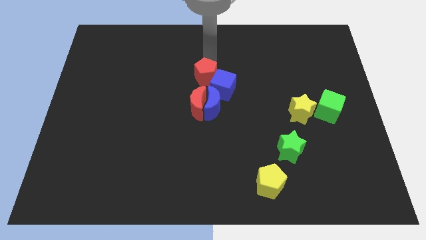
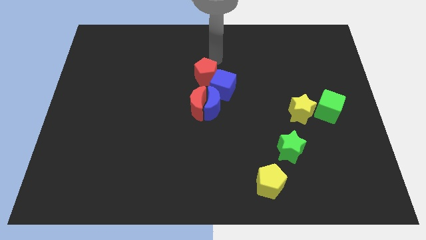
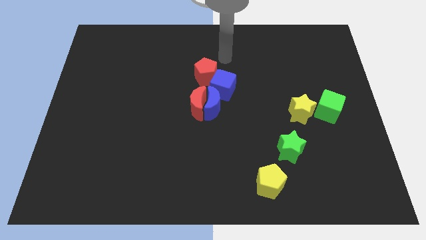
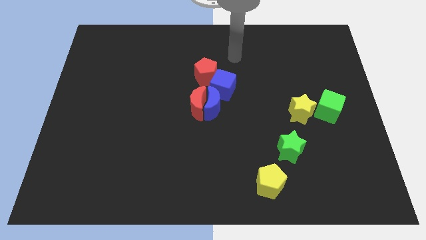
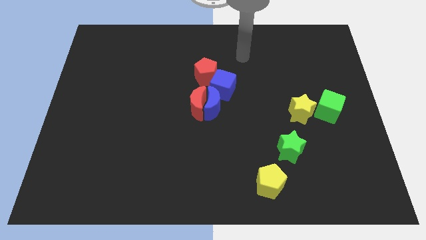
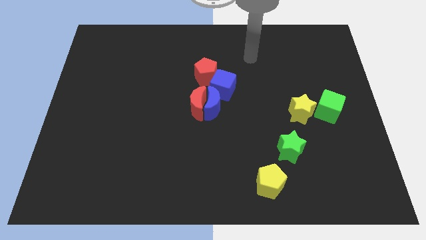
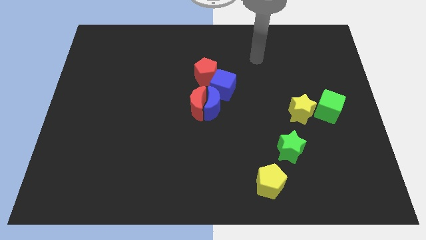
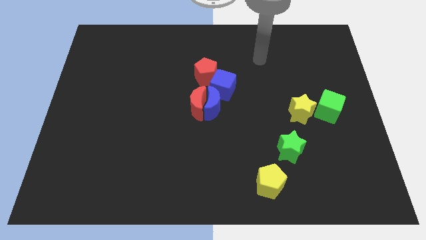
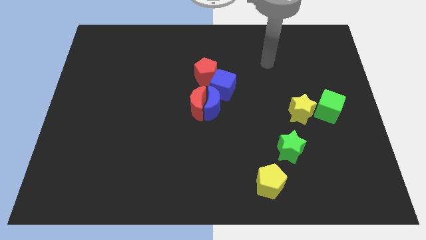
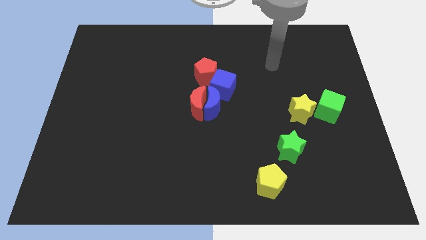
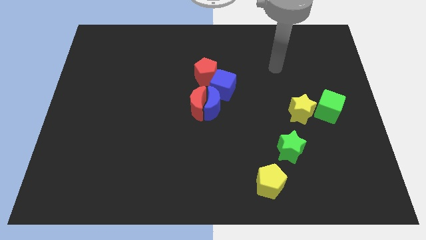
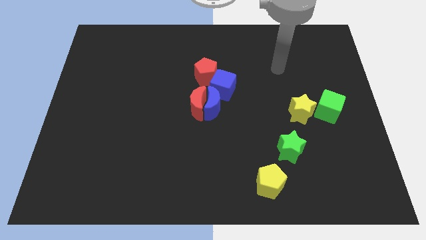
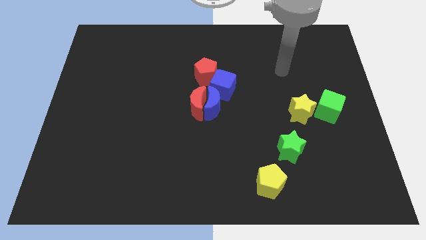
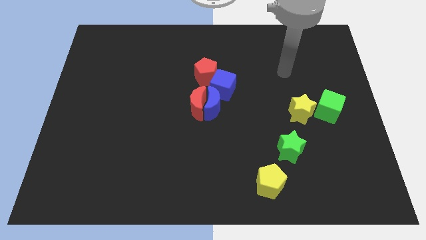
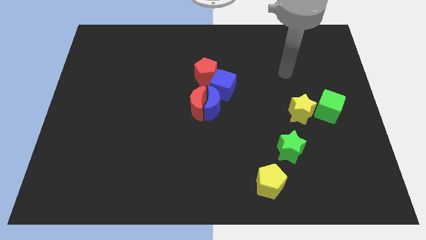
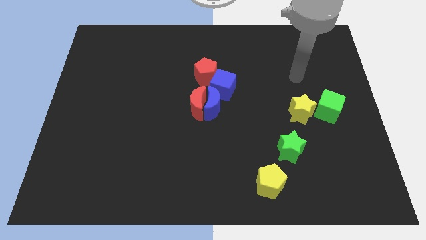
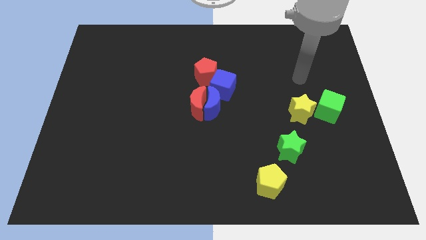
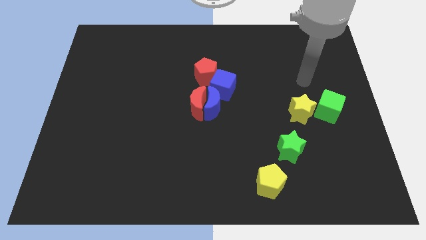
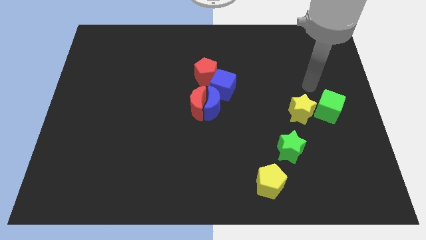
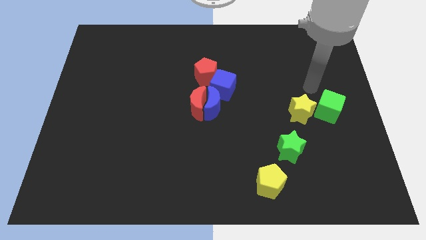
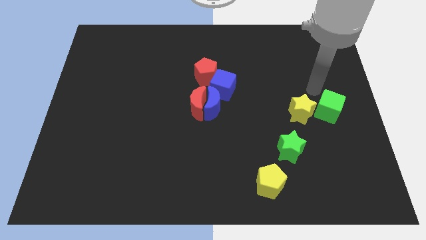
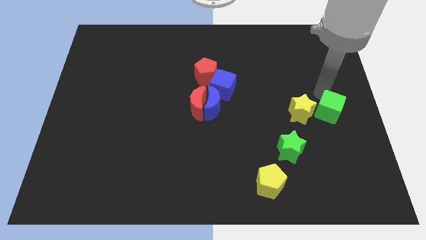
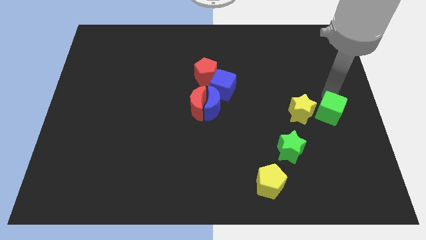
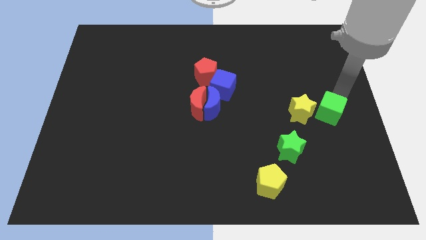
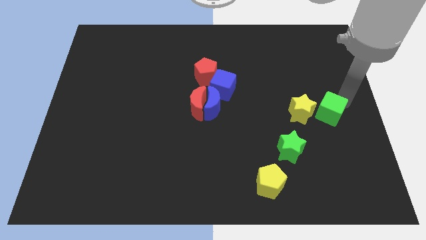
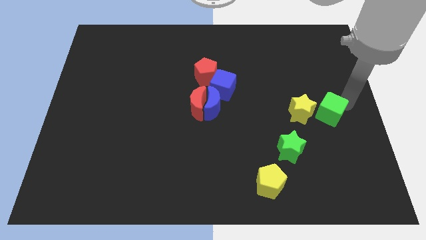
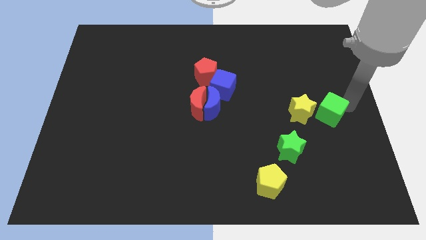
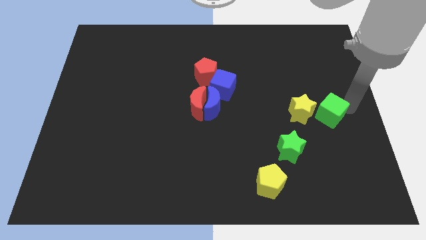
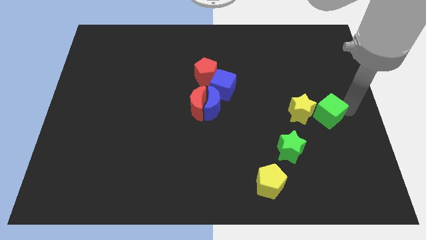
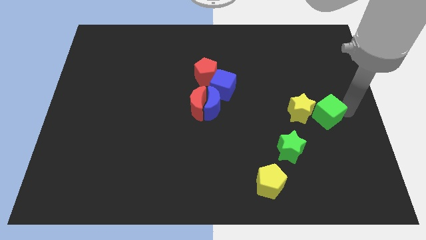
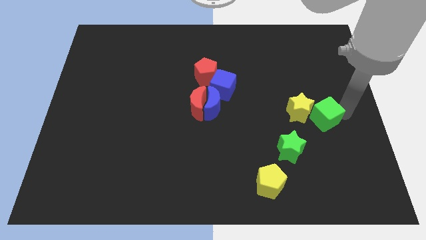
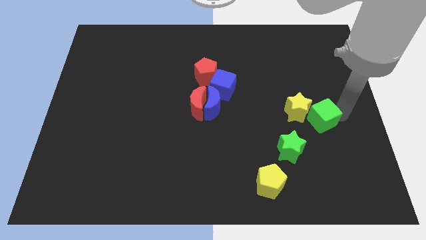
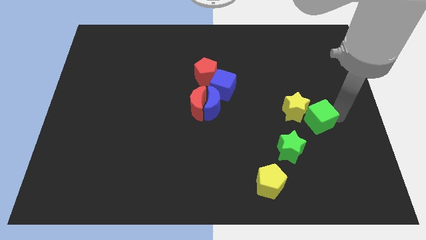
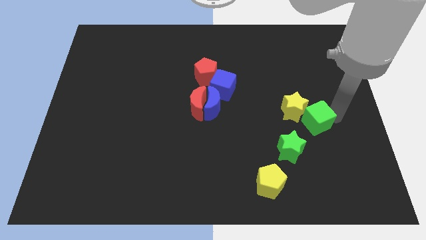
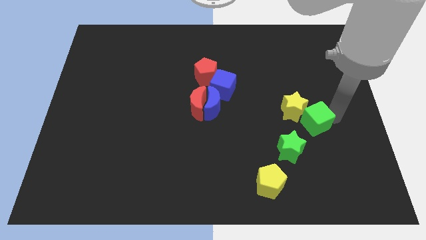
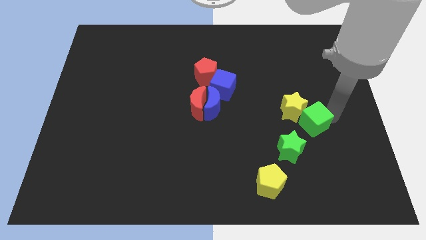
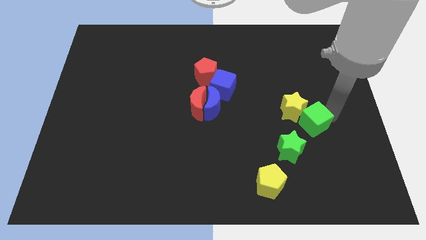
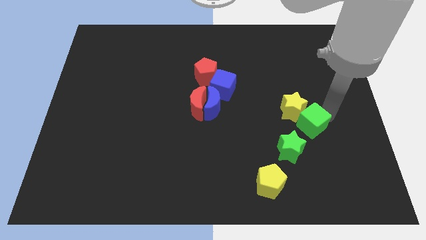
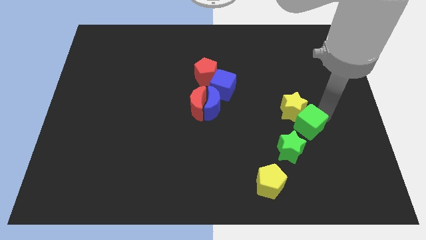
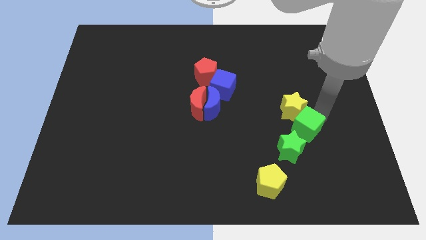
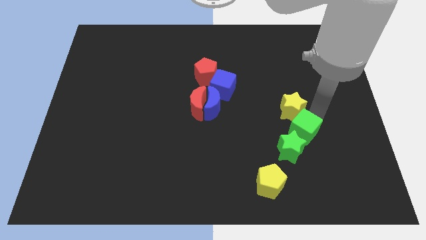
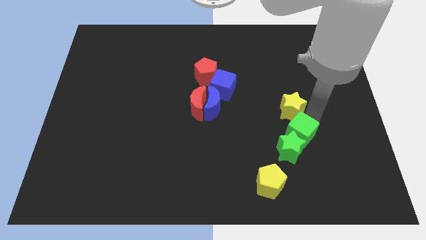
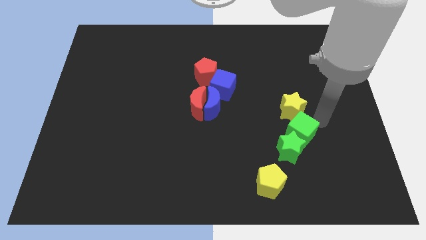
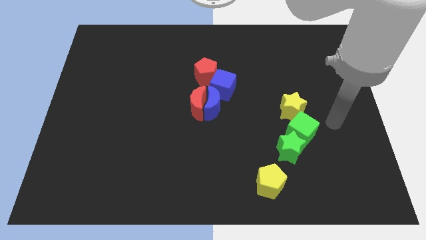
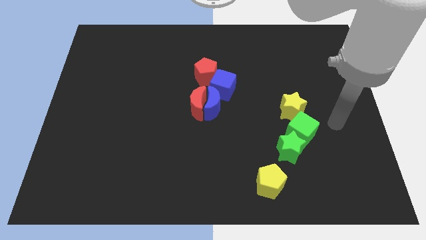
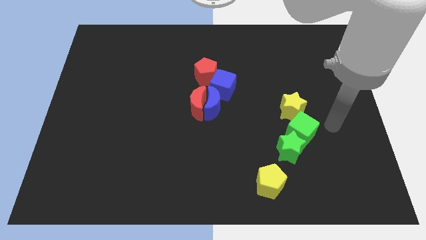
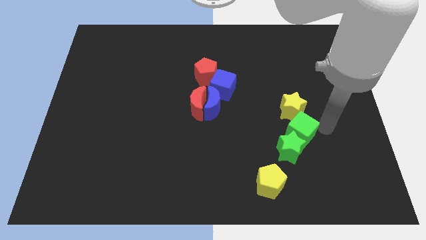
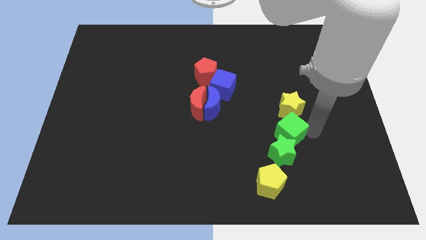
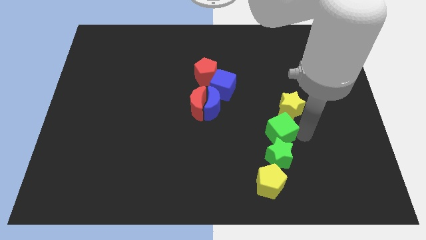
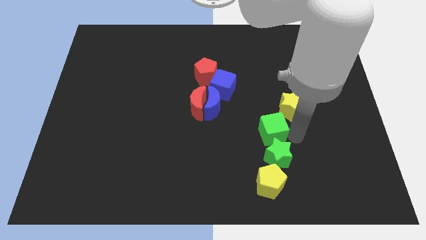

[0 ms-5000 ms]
push the green cube into the green star

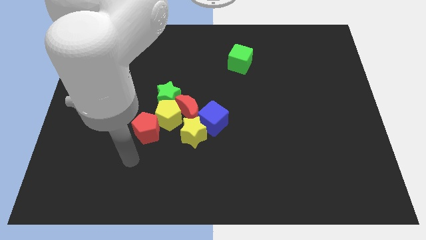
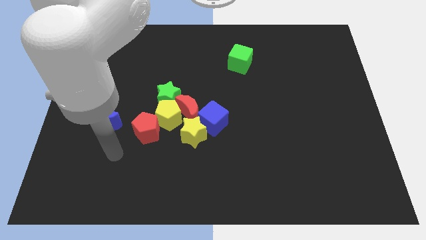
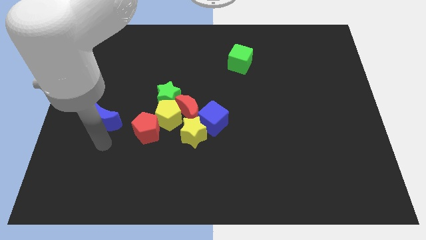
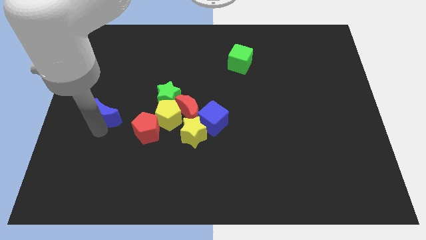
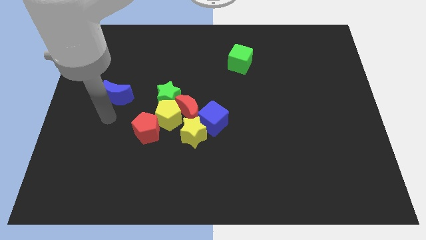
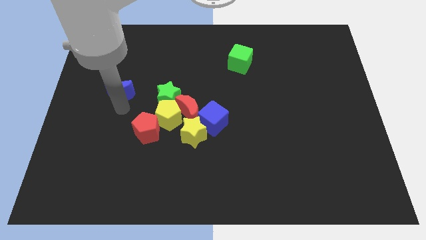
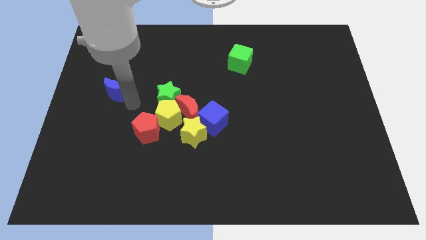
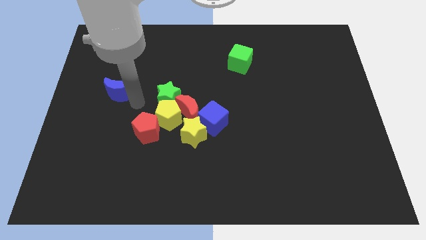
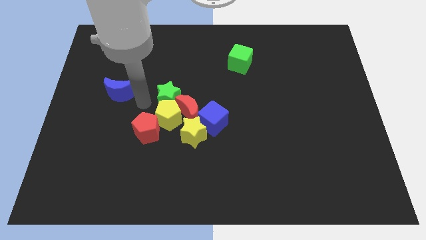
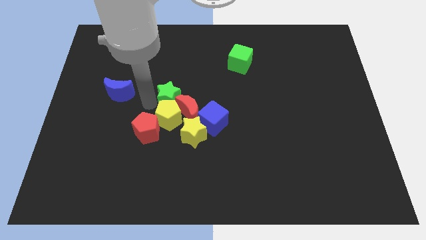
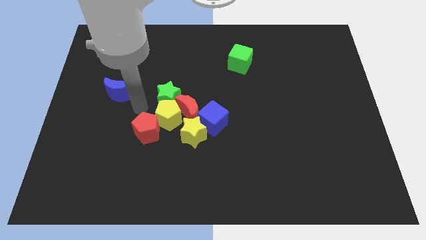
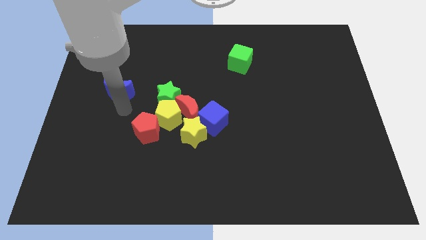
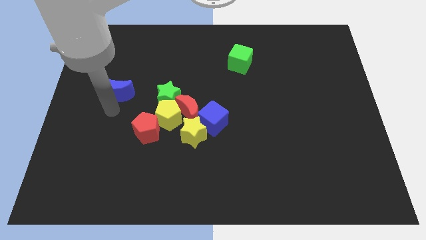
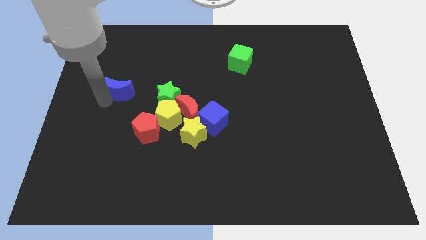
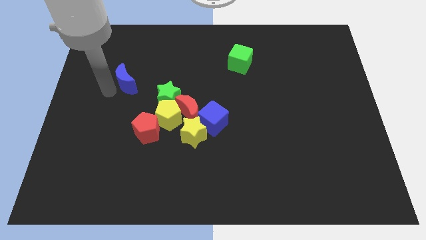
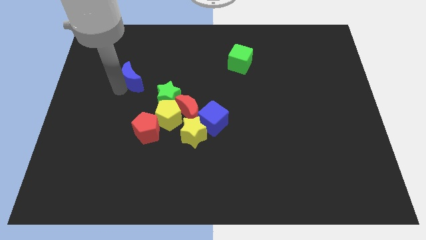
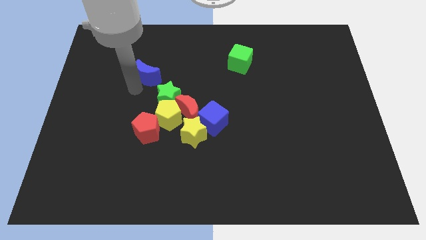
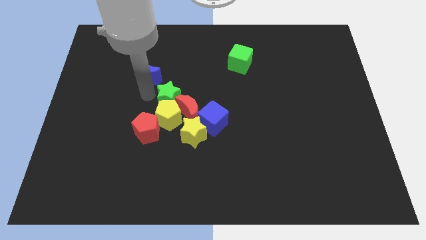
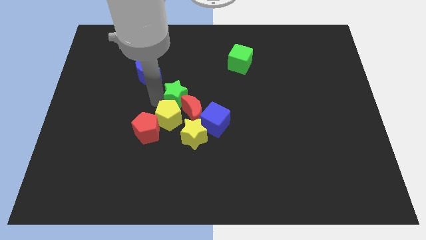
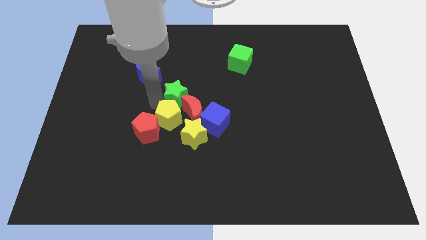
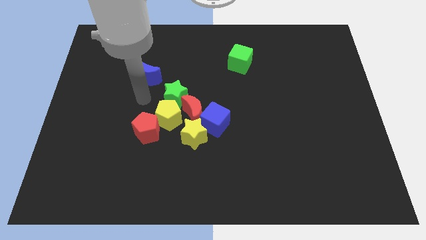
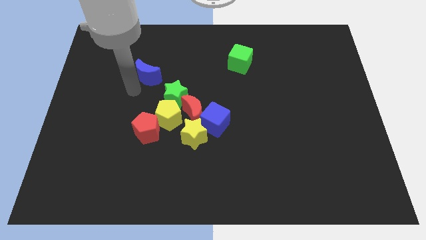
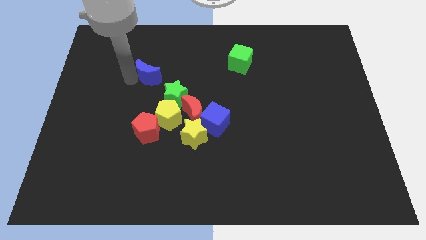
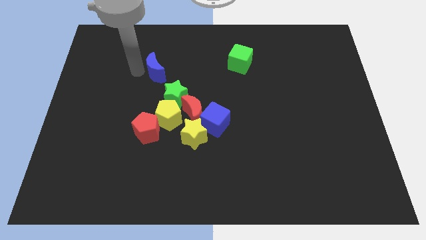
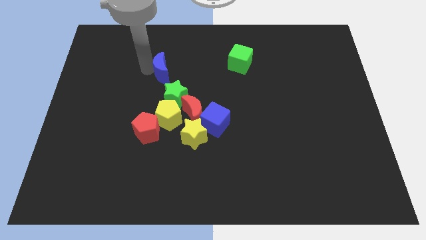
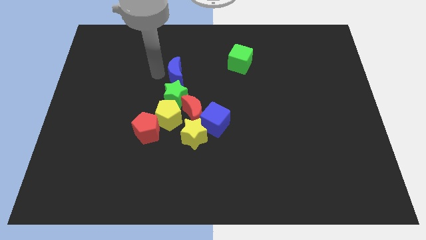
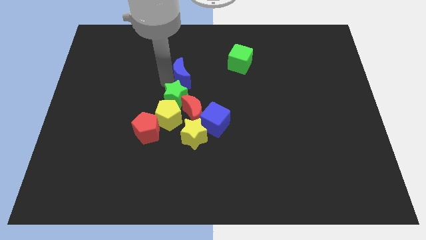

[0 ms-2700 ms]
place the blue crescent above the green star

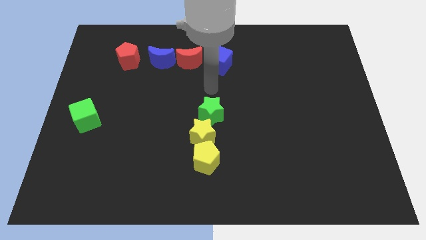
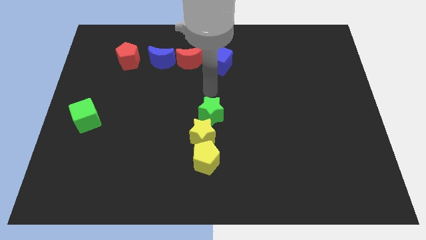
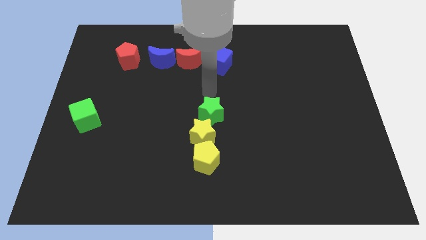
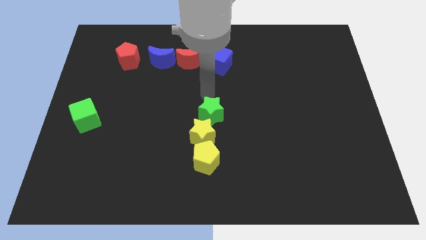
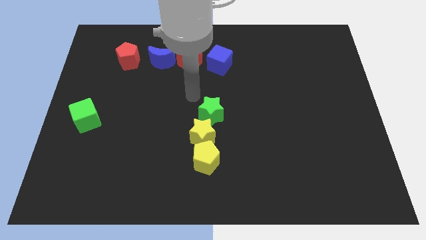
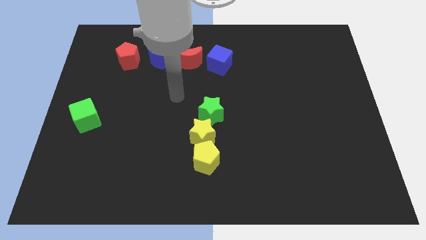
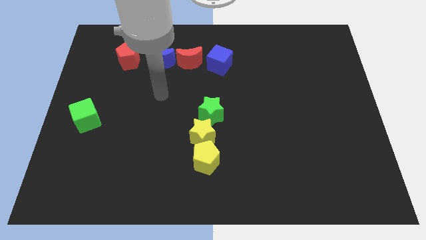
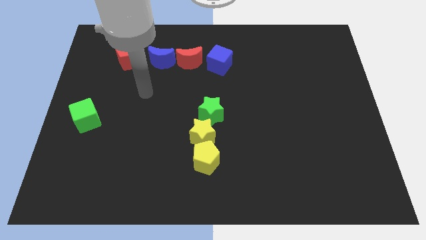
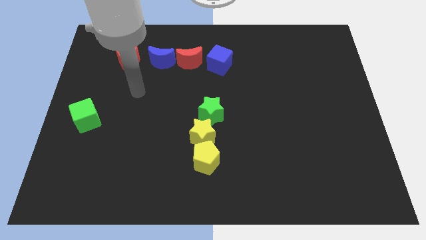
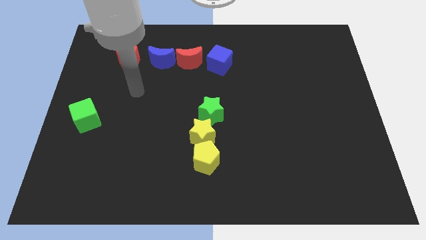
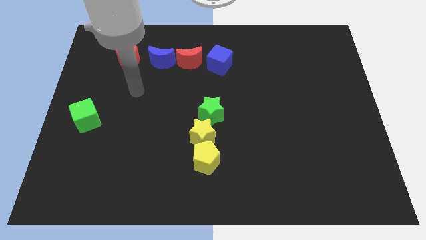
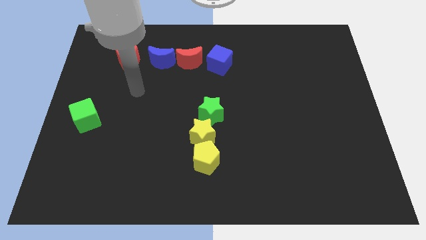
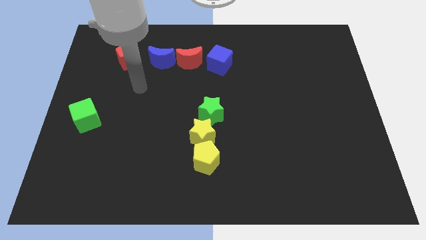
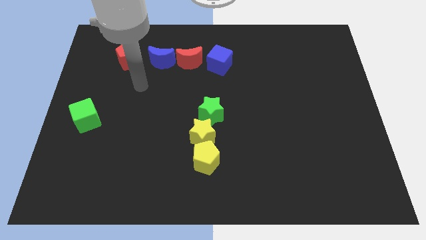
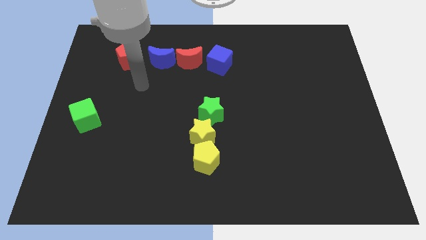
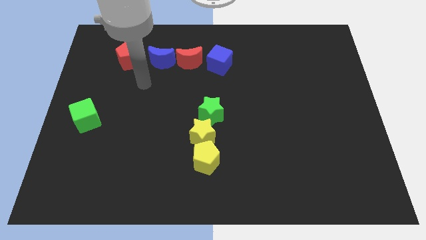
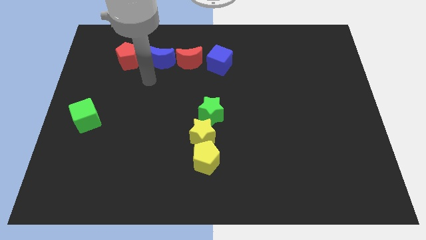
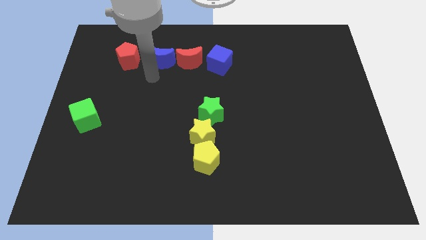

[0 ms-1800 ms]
move your arm towards the blue moon
